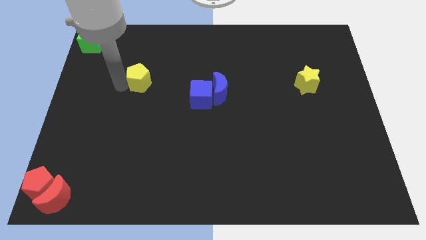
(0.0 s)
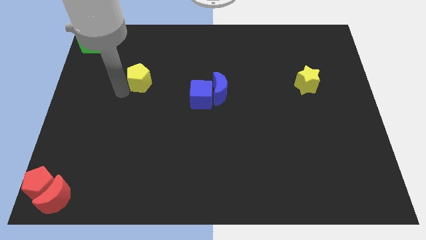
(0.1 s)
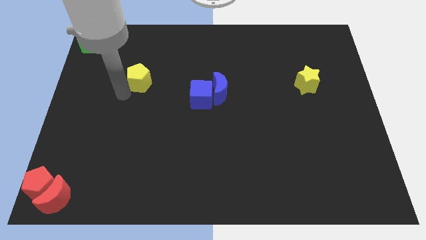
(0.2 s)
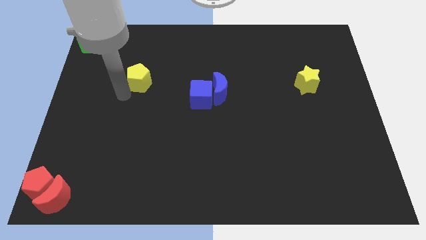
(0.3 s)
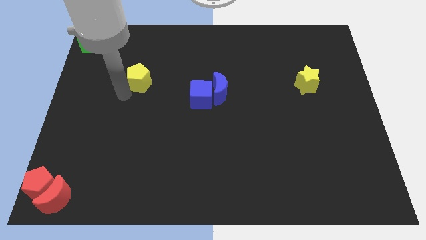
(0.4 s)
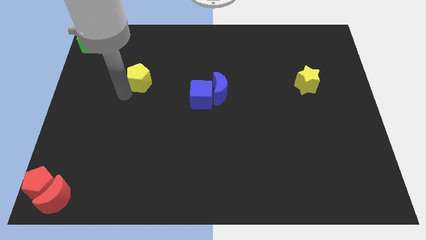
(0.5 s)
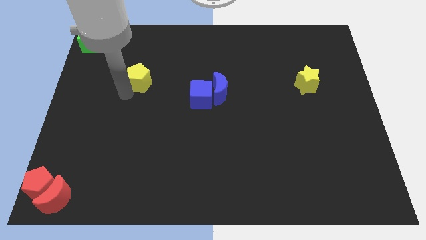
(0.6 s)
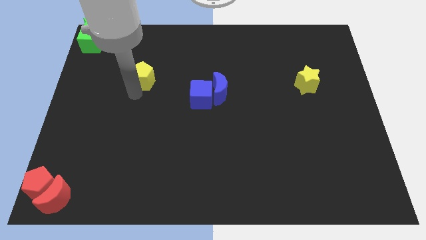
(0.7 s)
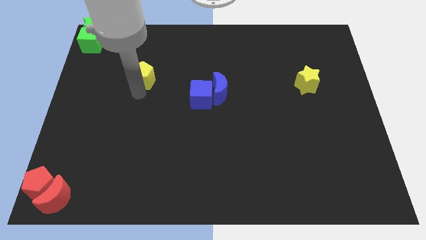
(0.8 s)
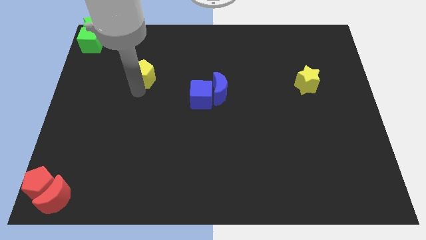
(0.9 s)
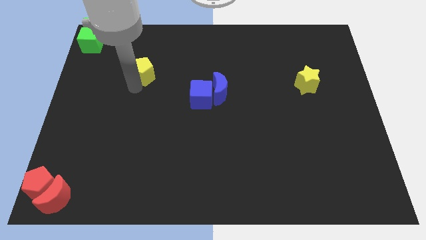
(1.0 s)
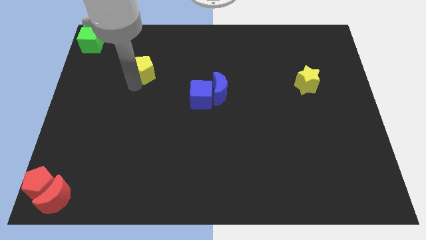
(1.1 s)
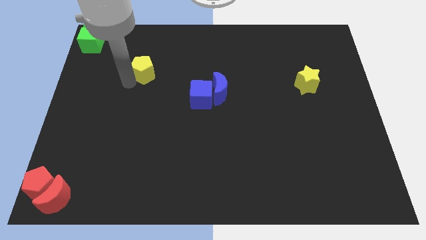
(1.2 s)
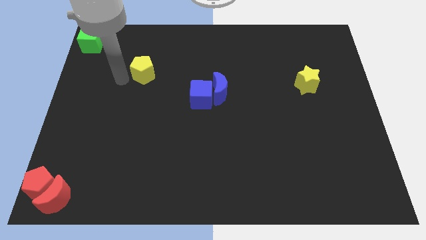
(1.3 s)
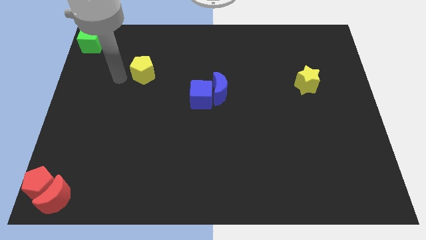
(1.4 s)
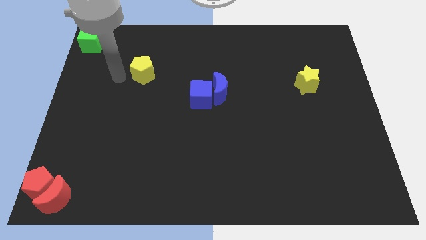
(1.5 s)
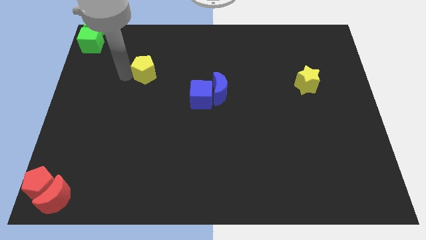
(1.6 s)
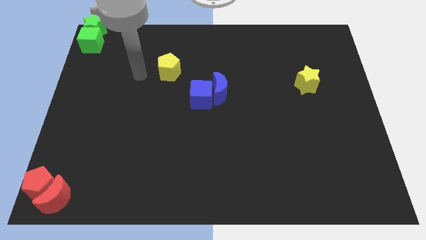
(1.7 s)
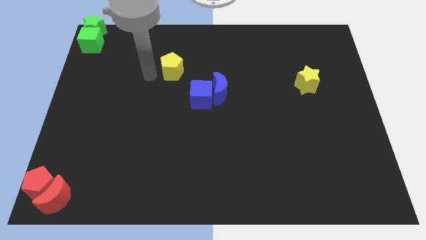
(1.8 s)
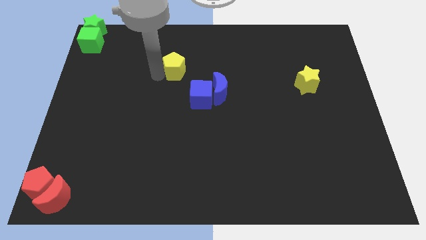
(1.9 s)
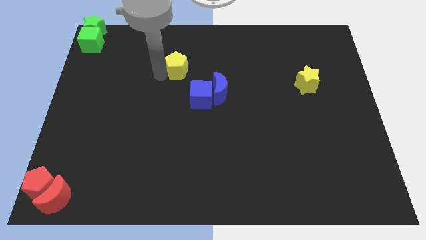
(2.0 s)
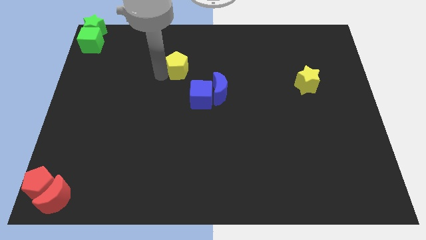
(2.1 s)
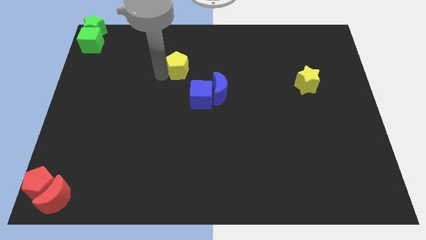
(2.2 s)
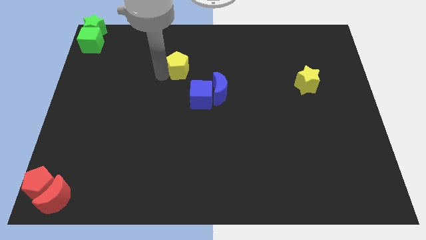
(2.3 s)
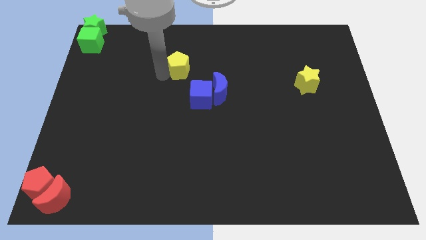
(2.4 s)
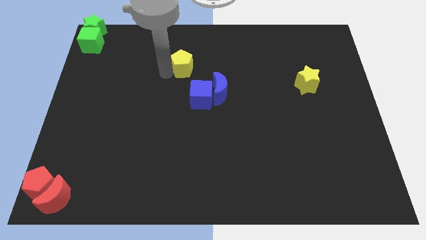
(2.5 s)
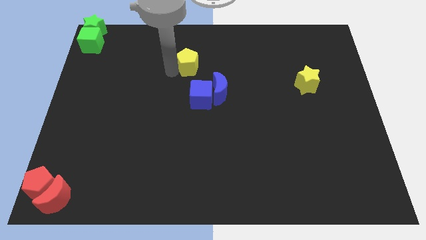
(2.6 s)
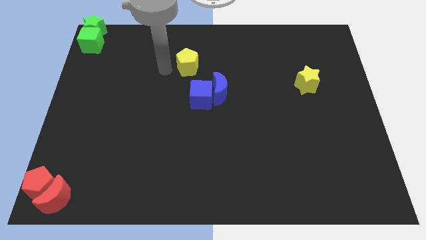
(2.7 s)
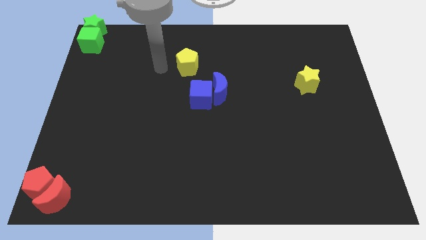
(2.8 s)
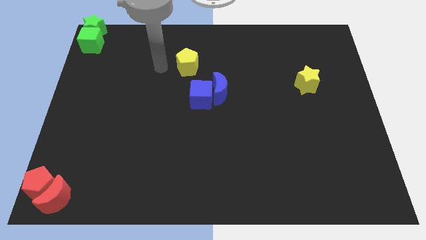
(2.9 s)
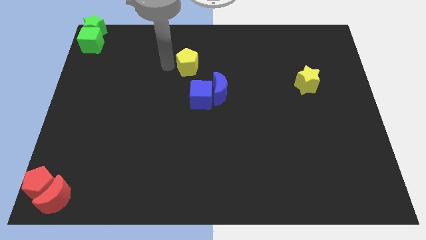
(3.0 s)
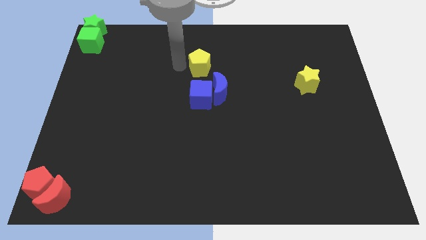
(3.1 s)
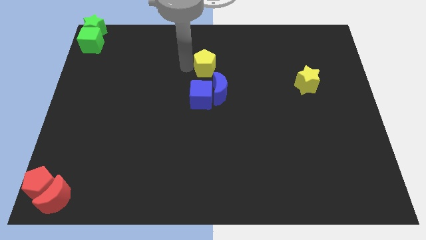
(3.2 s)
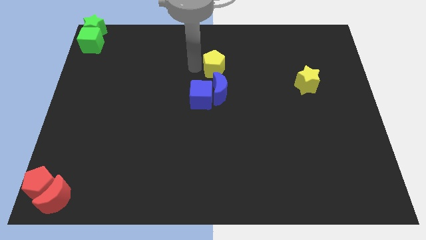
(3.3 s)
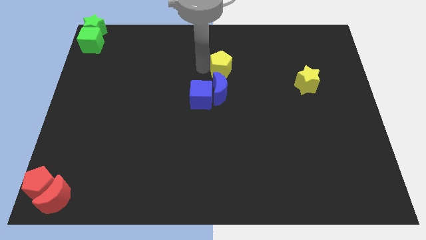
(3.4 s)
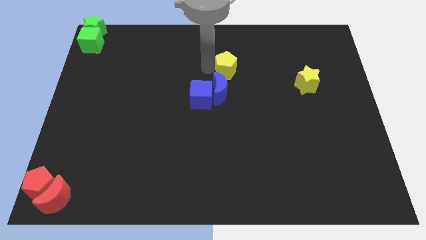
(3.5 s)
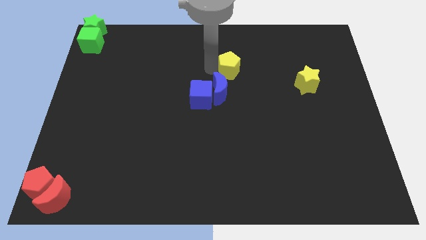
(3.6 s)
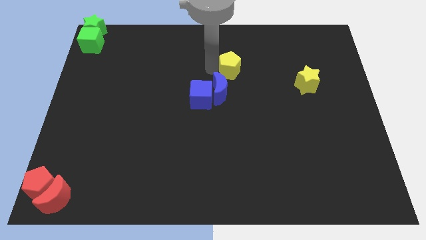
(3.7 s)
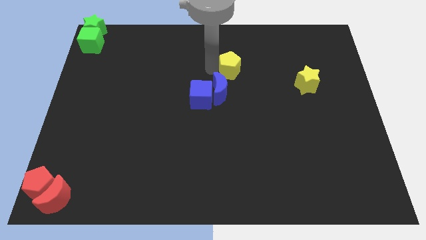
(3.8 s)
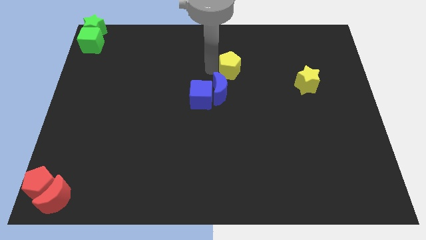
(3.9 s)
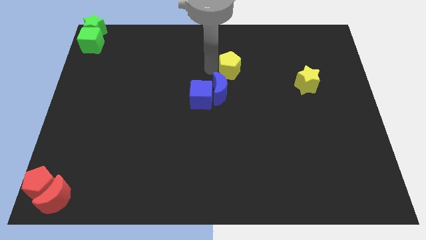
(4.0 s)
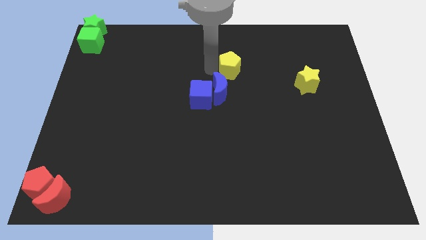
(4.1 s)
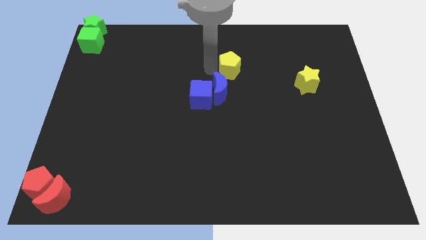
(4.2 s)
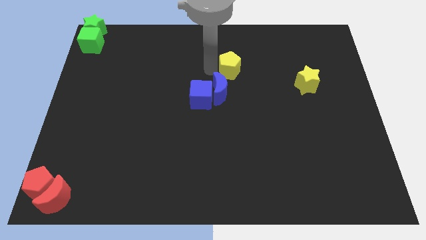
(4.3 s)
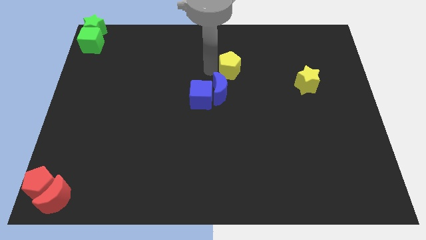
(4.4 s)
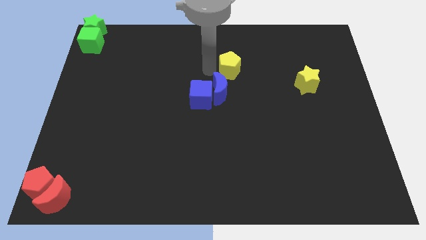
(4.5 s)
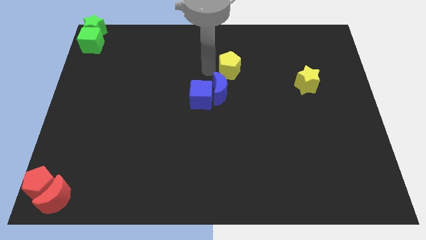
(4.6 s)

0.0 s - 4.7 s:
drag the yellow pentagon towards the yellow star

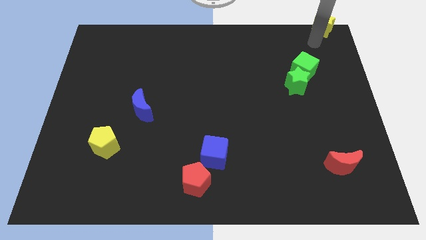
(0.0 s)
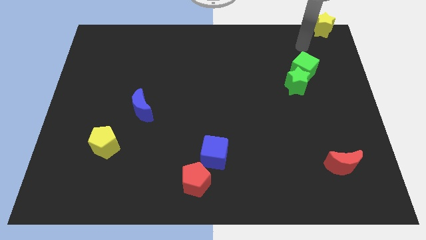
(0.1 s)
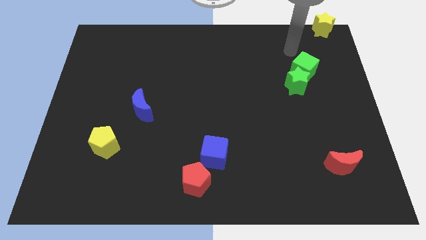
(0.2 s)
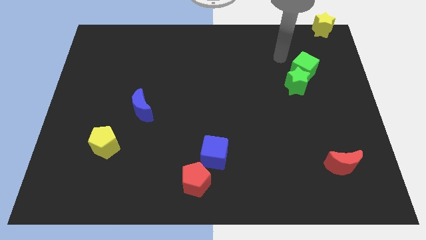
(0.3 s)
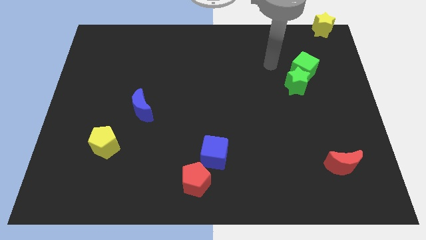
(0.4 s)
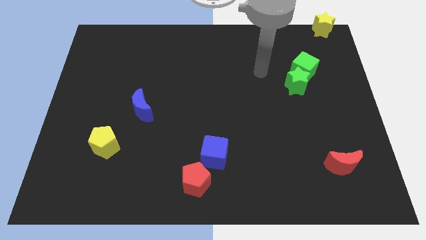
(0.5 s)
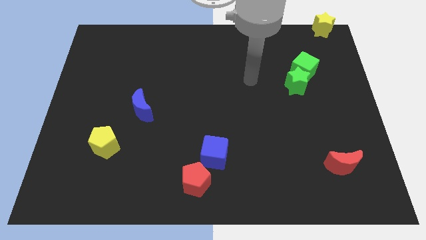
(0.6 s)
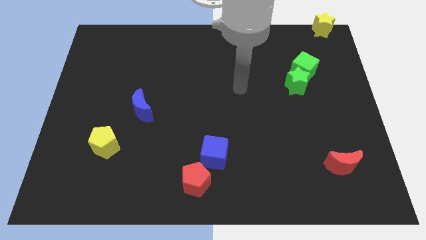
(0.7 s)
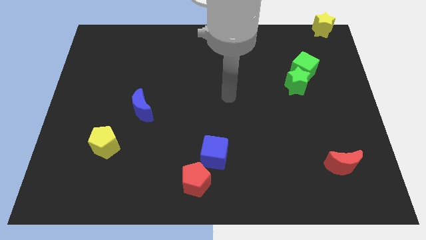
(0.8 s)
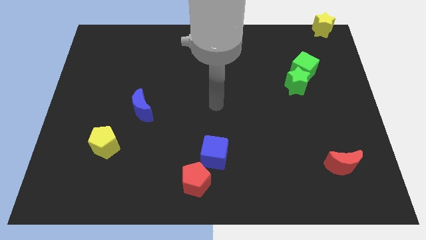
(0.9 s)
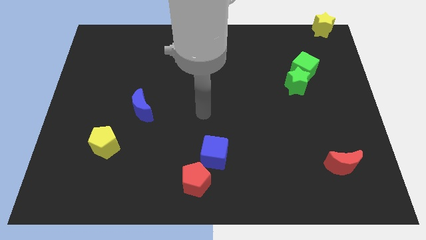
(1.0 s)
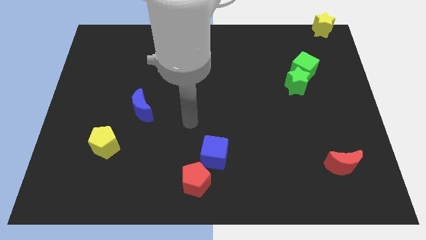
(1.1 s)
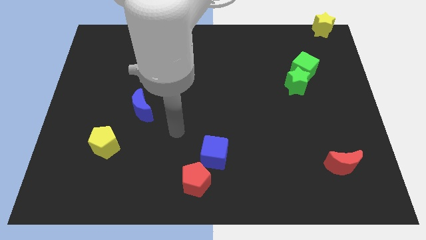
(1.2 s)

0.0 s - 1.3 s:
put your hand between the blue moon and blue cube

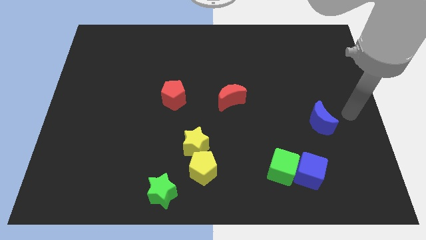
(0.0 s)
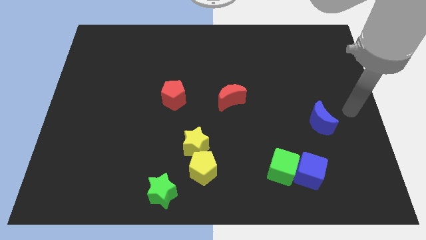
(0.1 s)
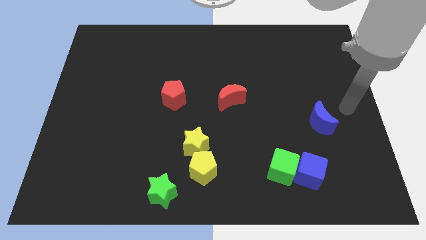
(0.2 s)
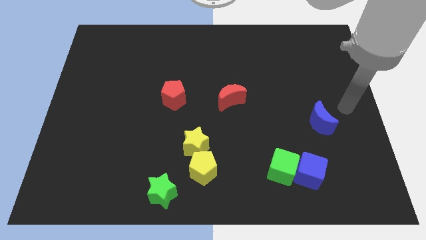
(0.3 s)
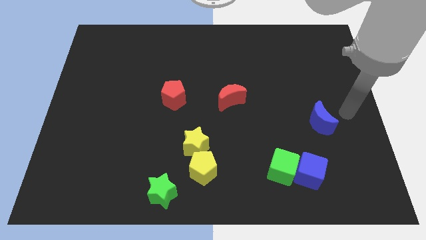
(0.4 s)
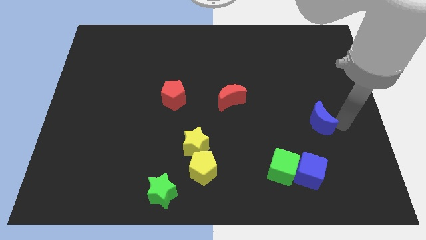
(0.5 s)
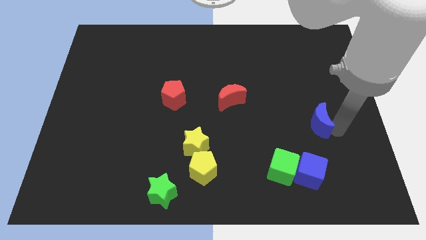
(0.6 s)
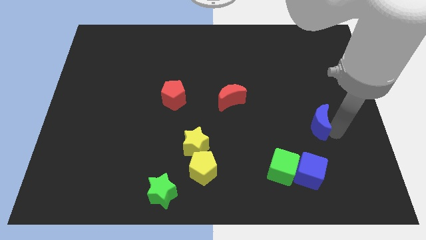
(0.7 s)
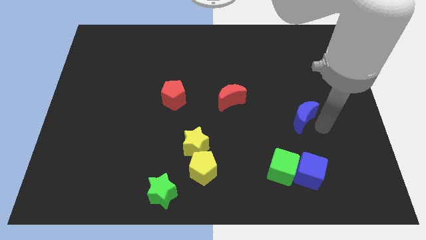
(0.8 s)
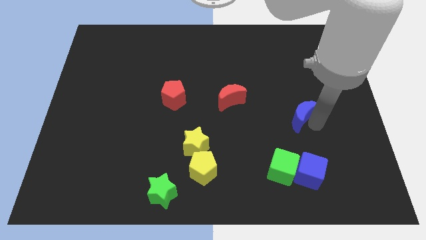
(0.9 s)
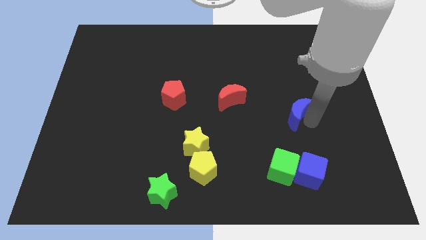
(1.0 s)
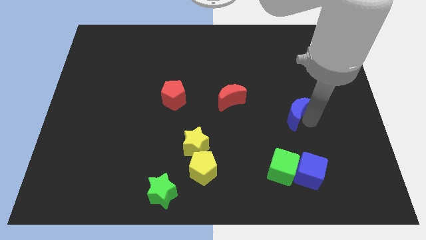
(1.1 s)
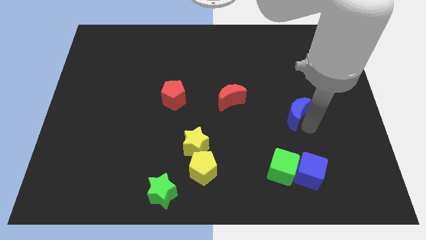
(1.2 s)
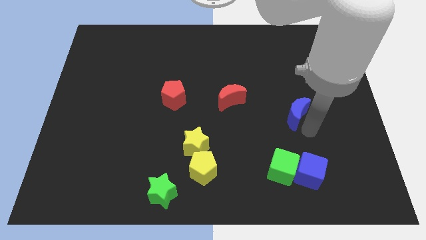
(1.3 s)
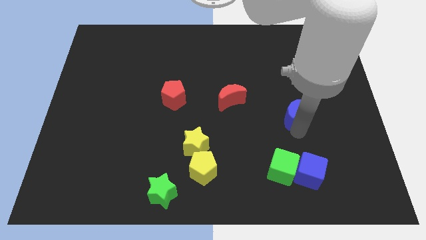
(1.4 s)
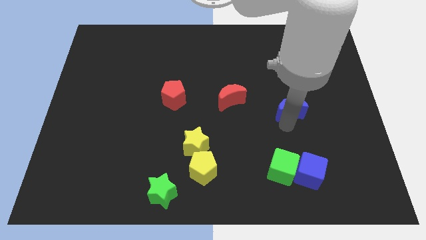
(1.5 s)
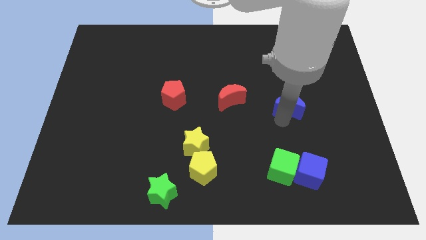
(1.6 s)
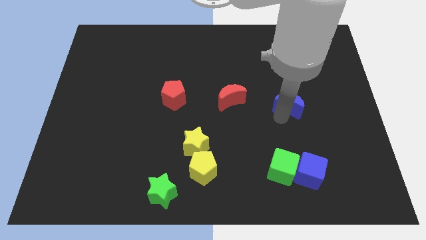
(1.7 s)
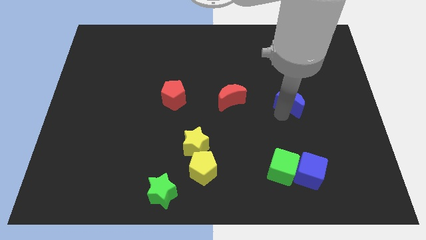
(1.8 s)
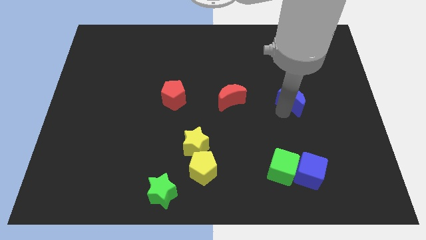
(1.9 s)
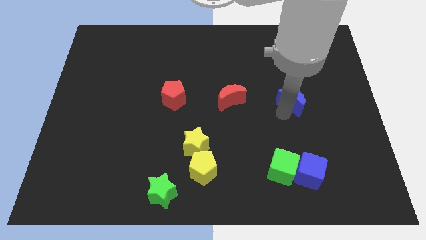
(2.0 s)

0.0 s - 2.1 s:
slide blue moon up to the right of red moon

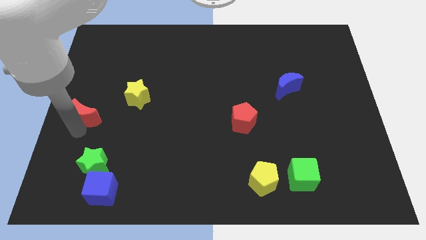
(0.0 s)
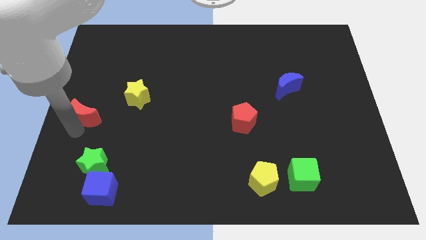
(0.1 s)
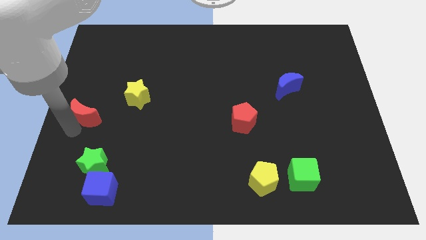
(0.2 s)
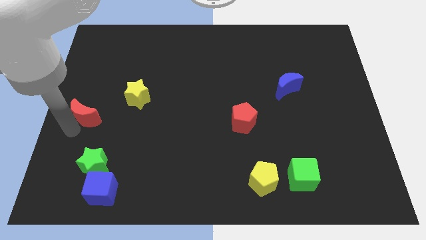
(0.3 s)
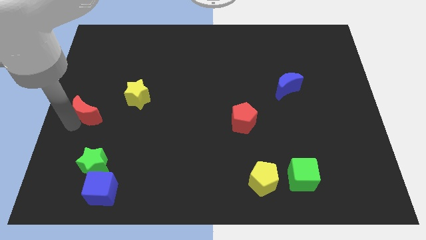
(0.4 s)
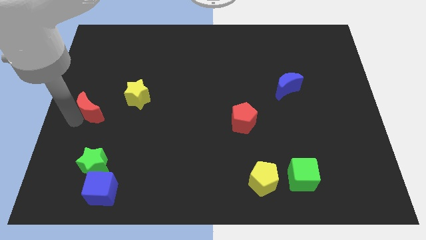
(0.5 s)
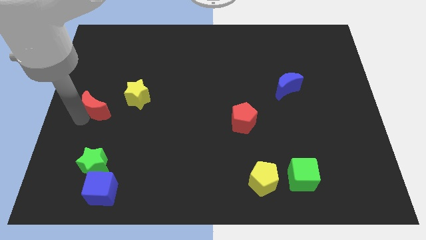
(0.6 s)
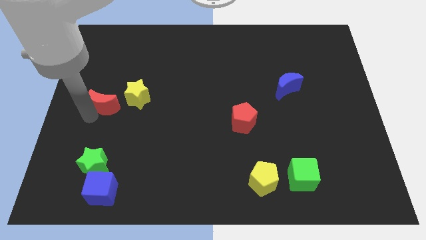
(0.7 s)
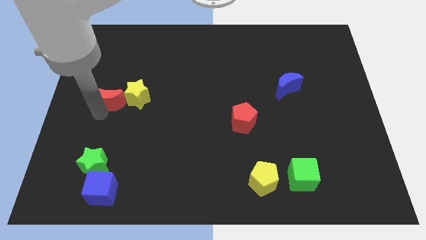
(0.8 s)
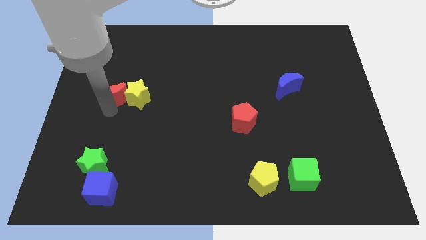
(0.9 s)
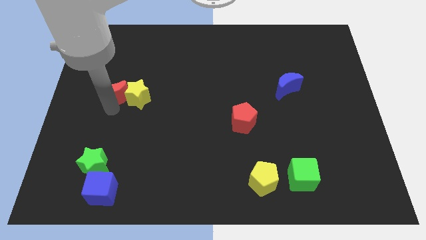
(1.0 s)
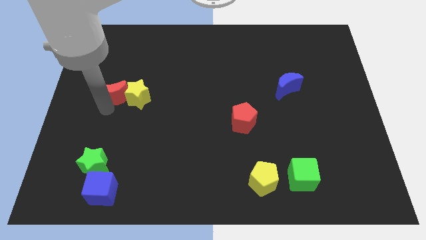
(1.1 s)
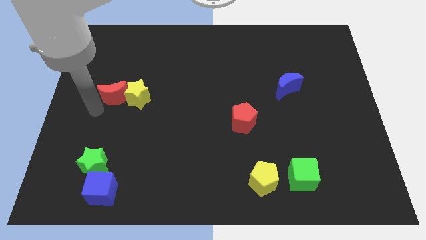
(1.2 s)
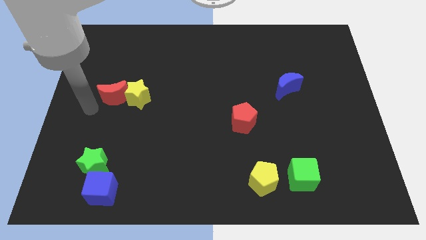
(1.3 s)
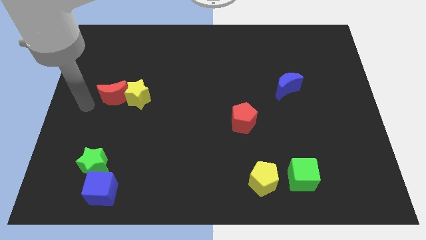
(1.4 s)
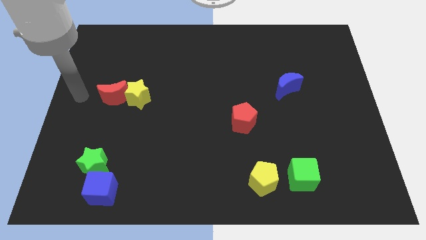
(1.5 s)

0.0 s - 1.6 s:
push the red moon into the yellow star
